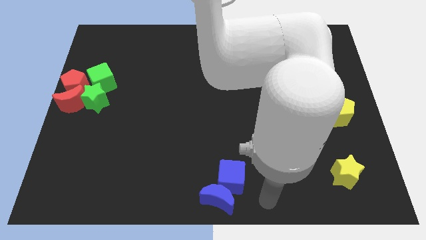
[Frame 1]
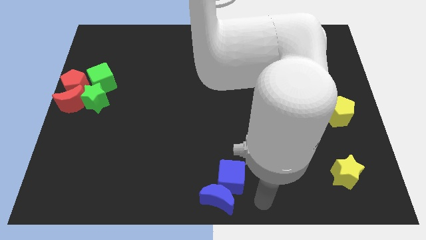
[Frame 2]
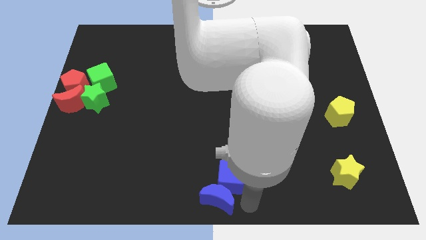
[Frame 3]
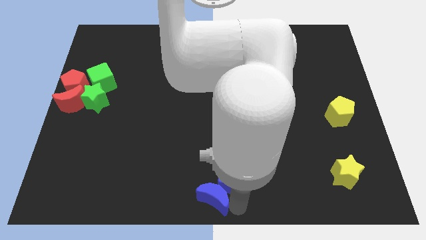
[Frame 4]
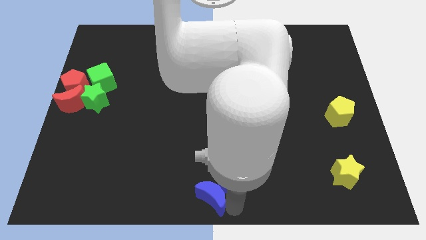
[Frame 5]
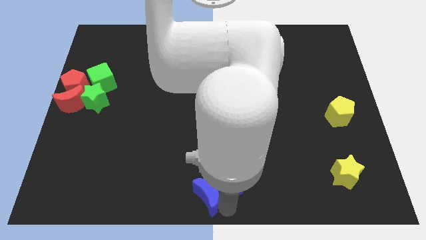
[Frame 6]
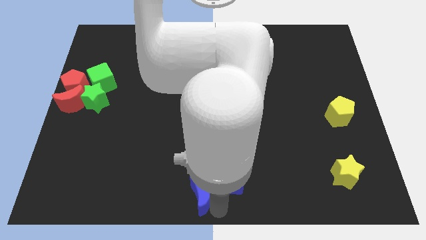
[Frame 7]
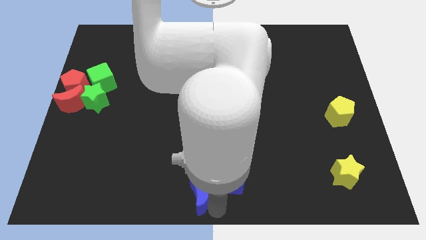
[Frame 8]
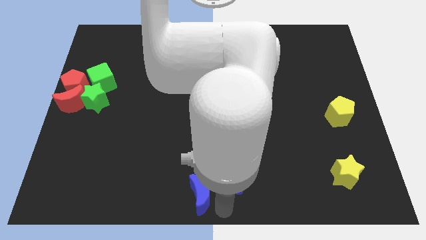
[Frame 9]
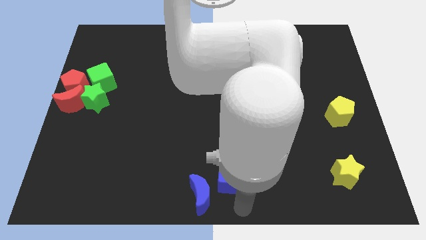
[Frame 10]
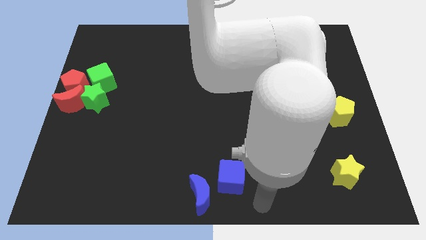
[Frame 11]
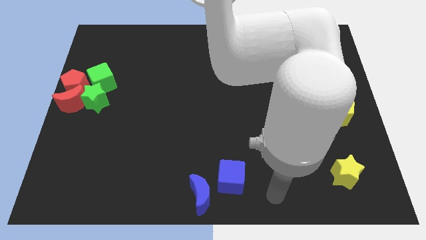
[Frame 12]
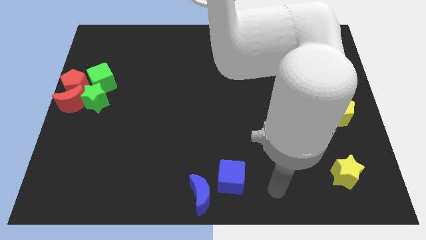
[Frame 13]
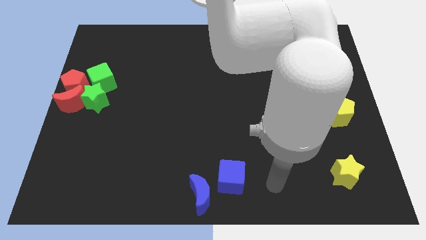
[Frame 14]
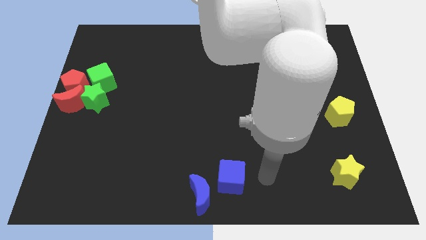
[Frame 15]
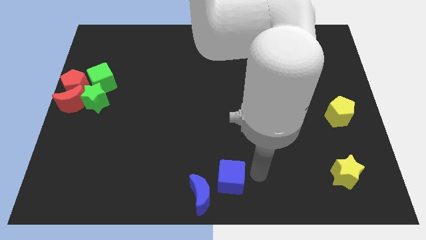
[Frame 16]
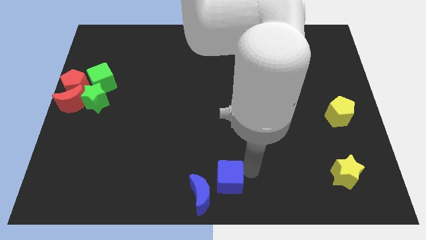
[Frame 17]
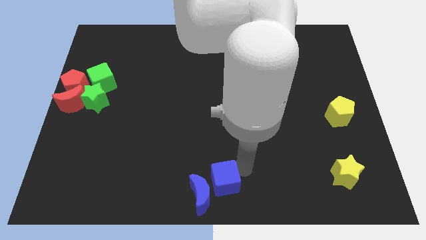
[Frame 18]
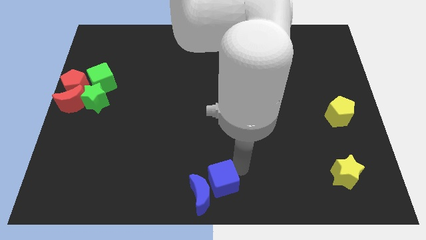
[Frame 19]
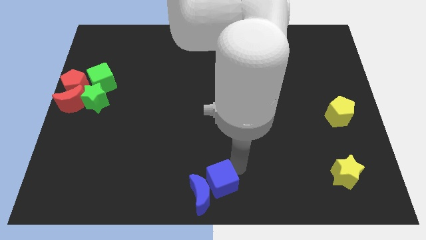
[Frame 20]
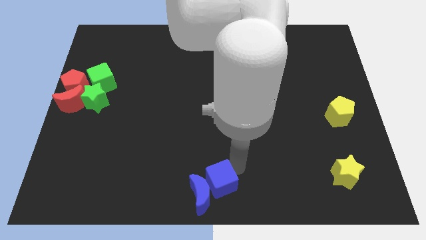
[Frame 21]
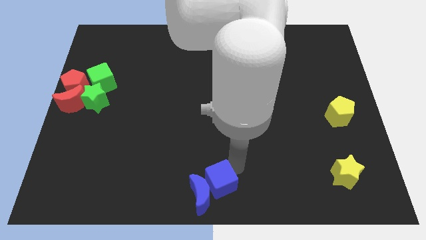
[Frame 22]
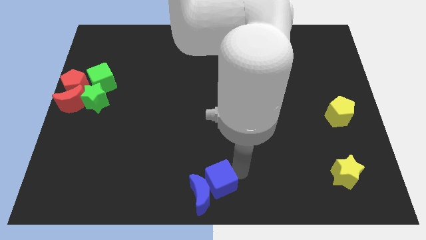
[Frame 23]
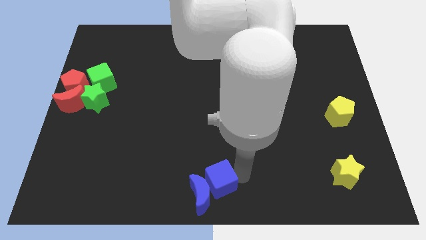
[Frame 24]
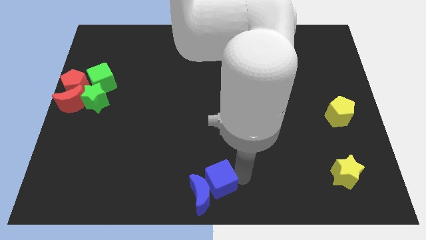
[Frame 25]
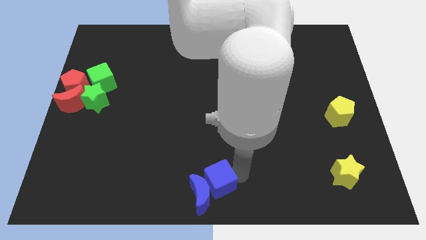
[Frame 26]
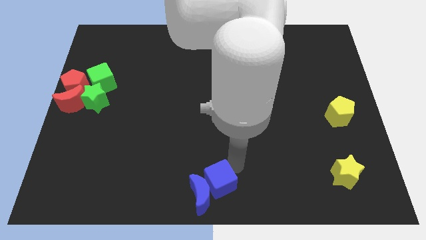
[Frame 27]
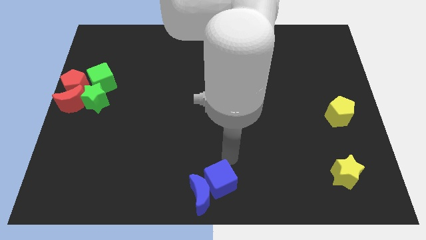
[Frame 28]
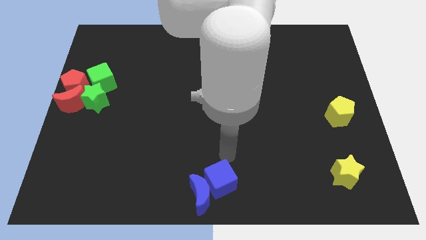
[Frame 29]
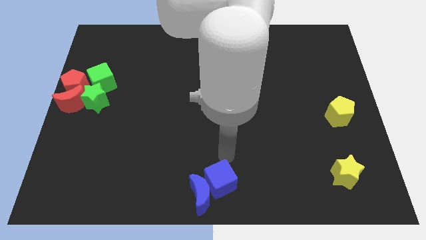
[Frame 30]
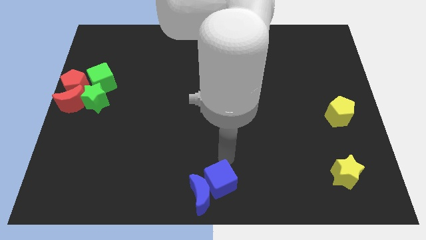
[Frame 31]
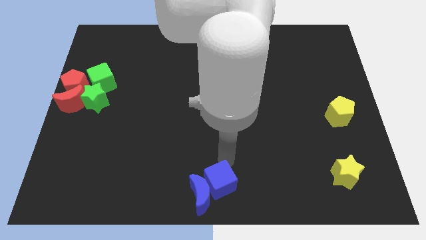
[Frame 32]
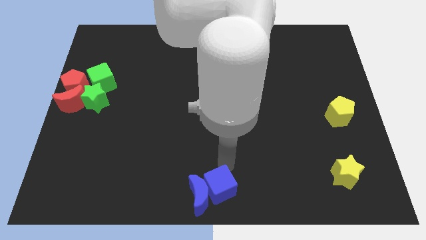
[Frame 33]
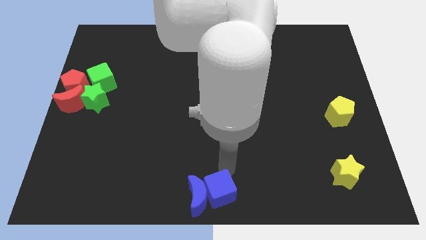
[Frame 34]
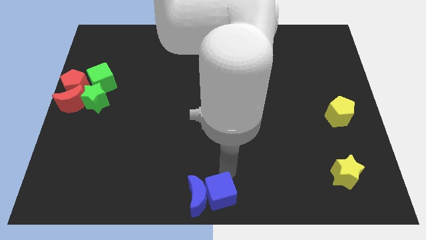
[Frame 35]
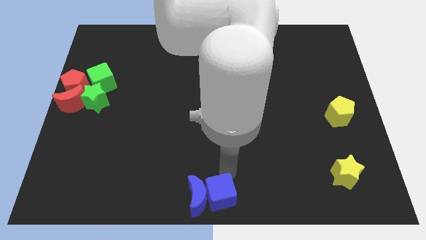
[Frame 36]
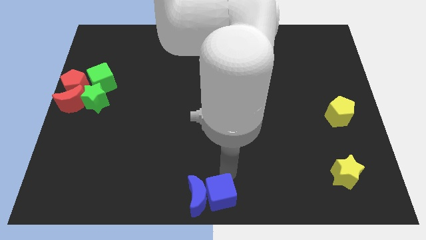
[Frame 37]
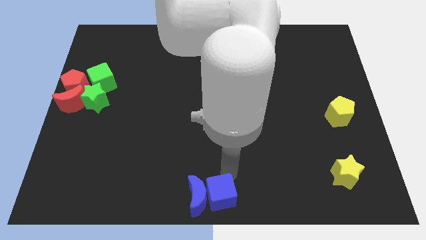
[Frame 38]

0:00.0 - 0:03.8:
adjust the blue blocks at the bottom center of the table

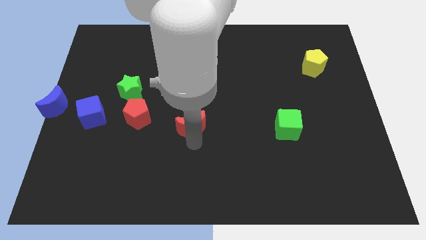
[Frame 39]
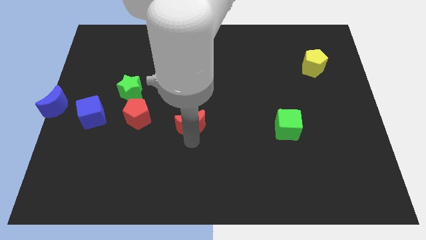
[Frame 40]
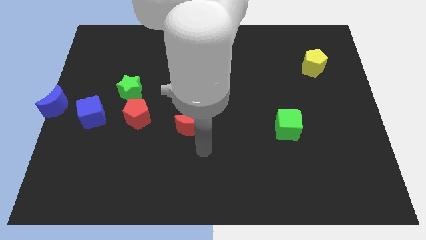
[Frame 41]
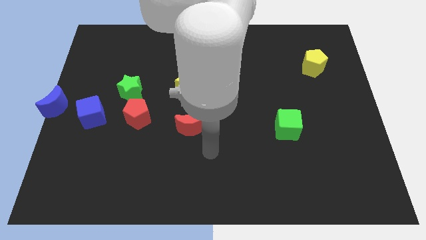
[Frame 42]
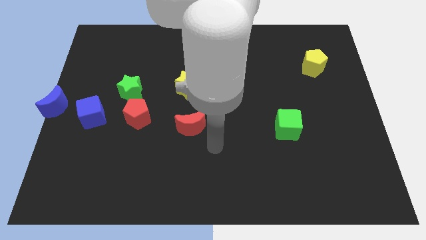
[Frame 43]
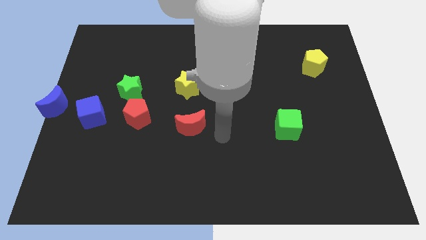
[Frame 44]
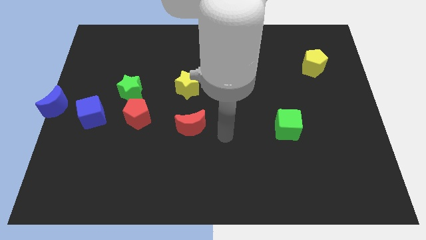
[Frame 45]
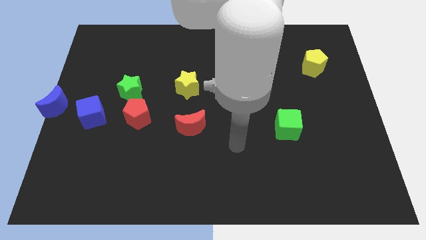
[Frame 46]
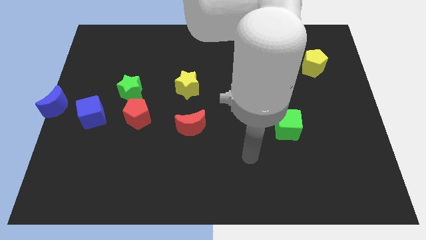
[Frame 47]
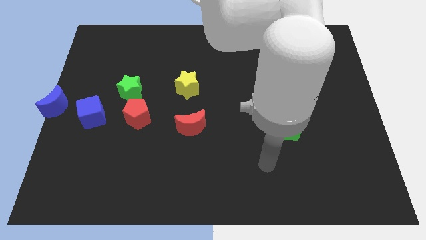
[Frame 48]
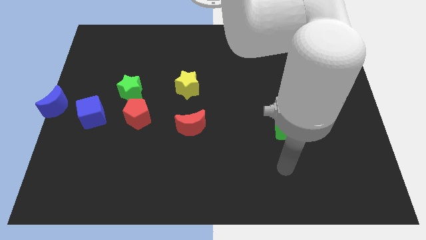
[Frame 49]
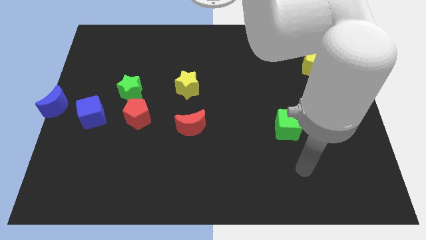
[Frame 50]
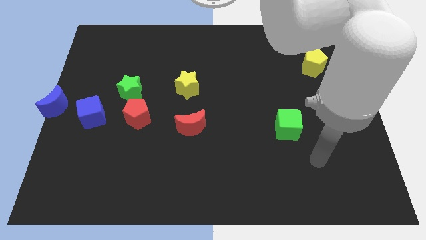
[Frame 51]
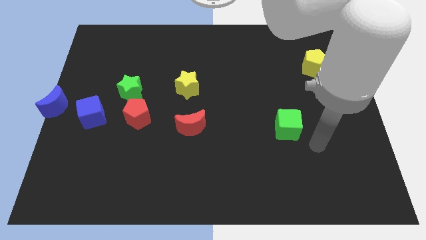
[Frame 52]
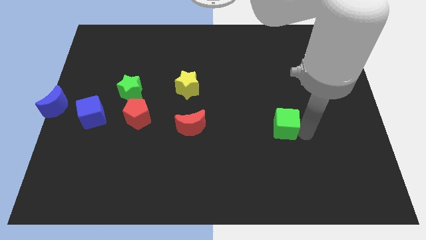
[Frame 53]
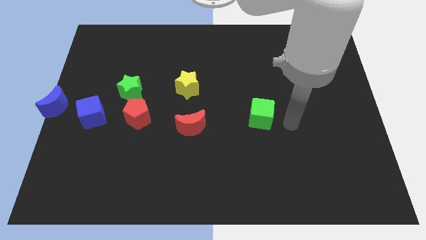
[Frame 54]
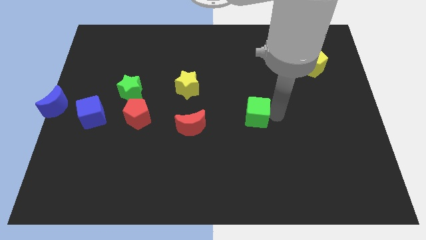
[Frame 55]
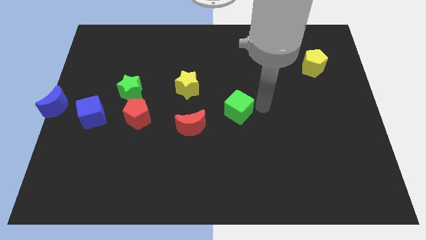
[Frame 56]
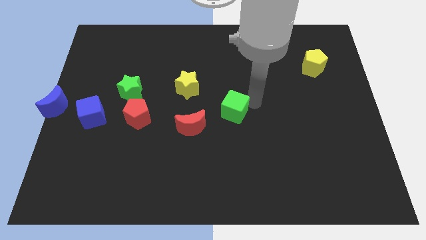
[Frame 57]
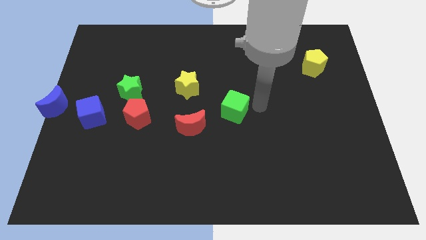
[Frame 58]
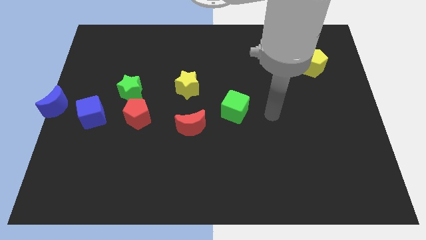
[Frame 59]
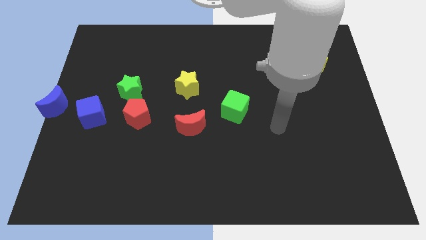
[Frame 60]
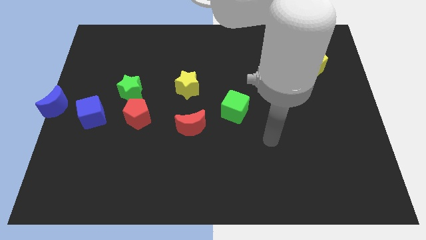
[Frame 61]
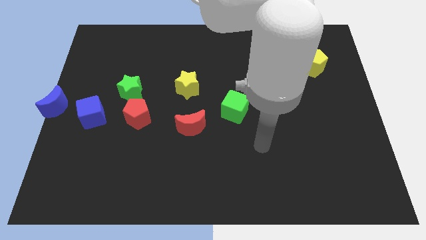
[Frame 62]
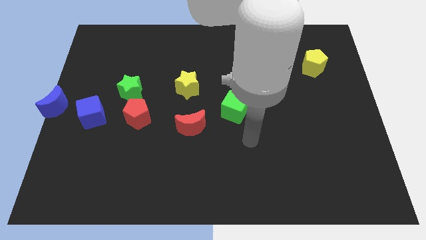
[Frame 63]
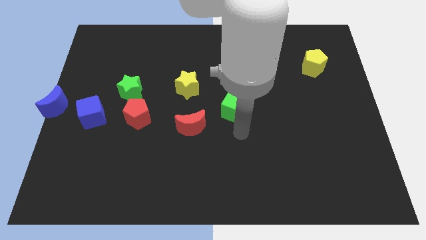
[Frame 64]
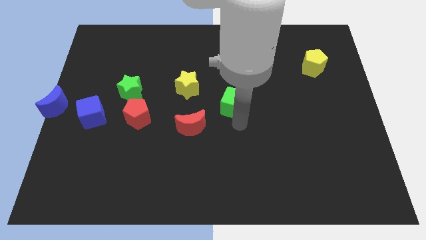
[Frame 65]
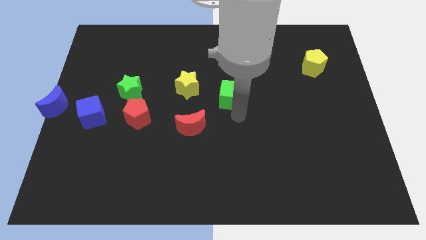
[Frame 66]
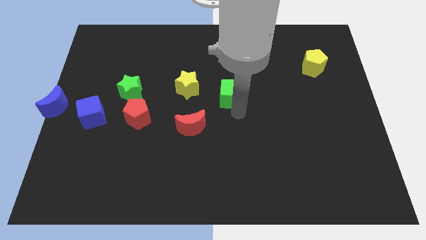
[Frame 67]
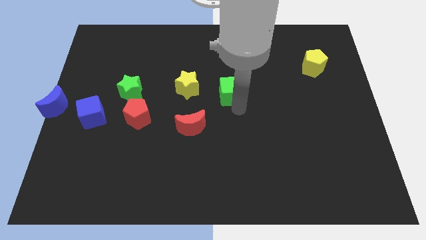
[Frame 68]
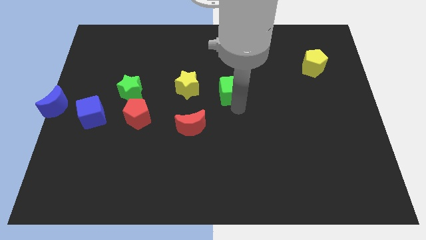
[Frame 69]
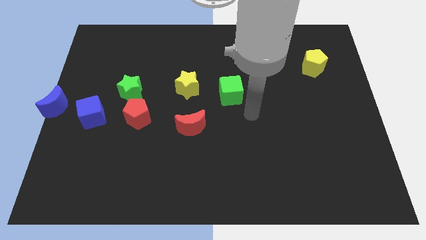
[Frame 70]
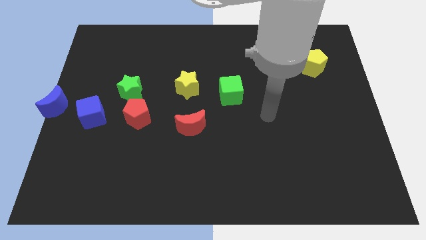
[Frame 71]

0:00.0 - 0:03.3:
slide the green cube towards the yellow star

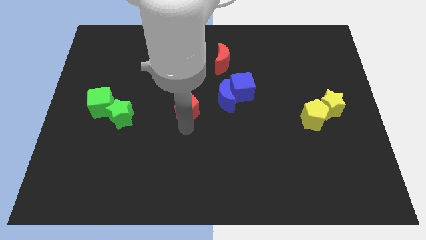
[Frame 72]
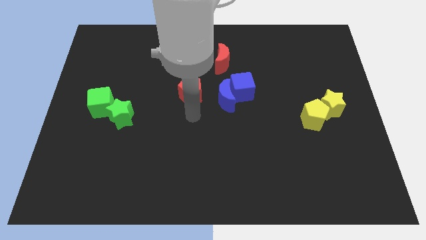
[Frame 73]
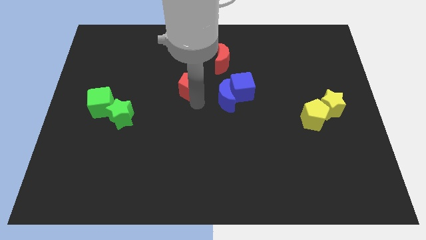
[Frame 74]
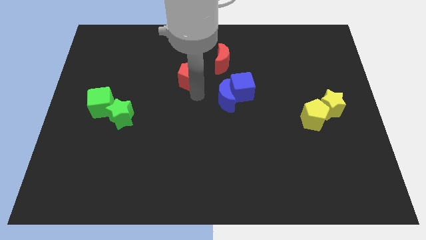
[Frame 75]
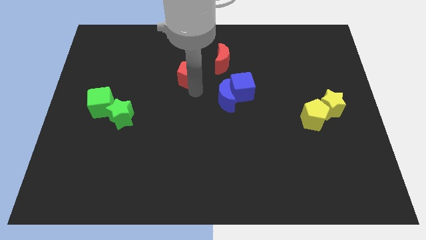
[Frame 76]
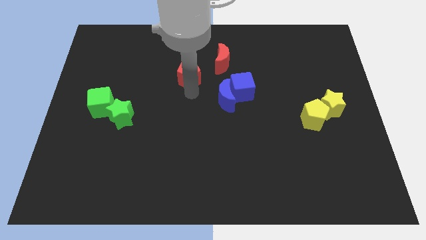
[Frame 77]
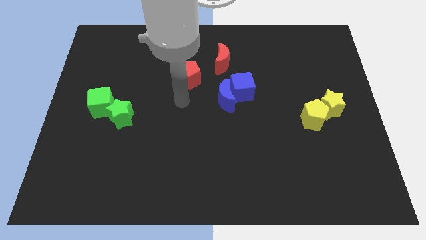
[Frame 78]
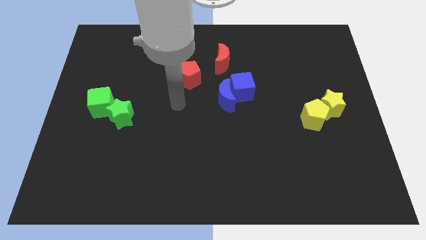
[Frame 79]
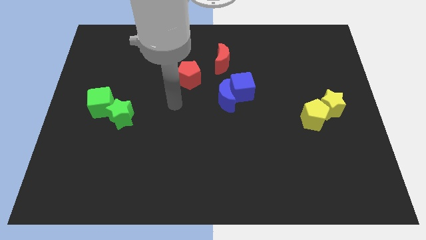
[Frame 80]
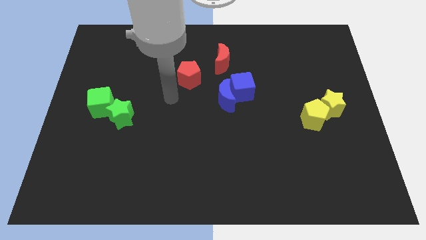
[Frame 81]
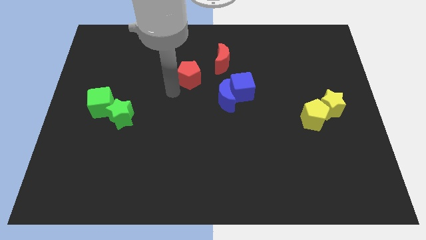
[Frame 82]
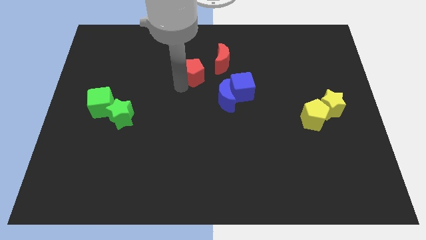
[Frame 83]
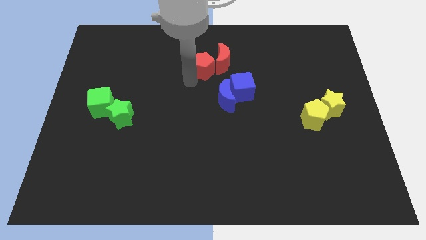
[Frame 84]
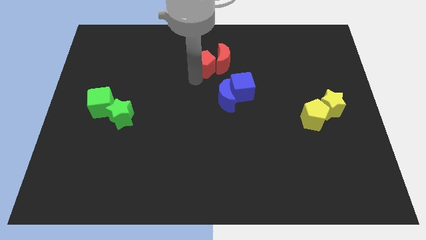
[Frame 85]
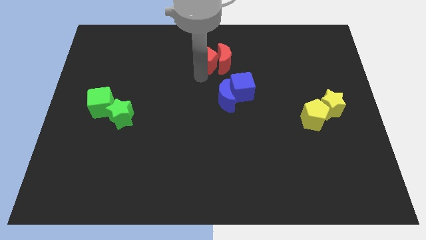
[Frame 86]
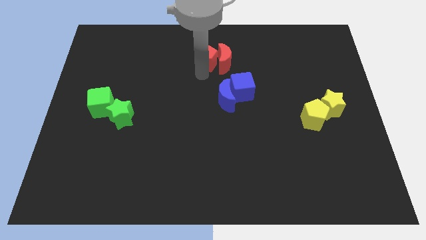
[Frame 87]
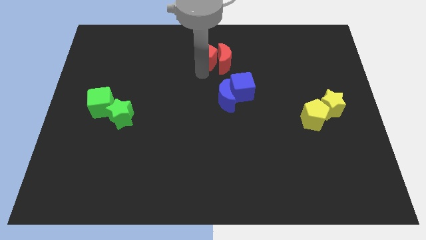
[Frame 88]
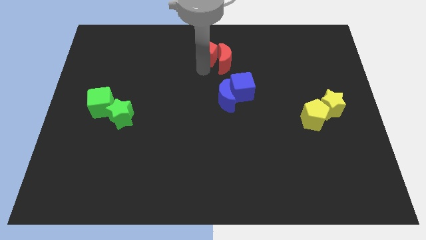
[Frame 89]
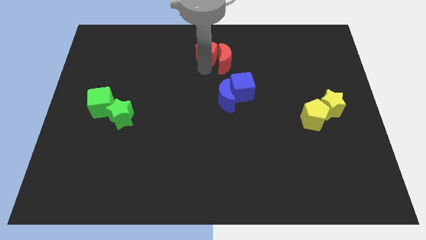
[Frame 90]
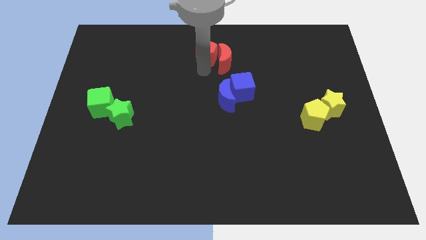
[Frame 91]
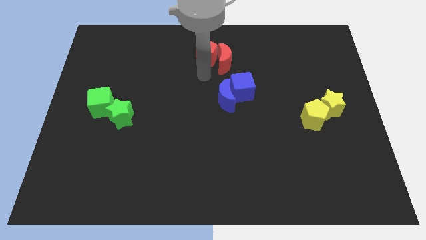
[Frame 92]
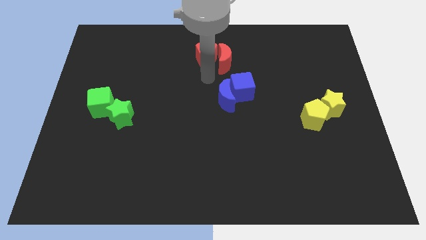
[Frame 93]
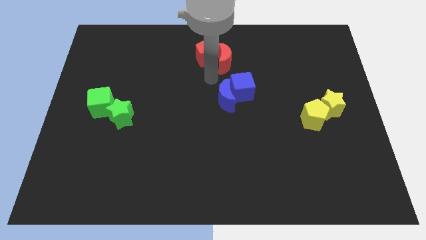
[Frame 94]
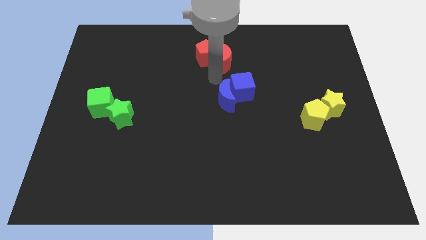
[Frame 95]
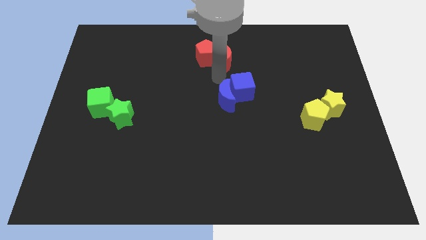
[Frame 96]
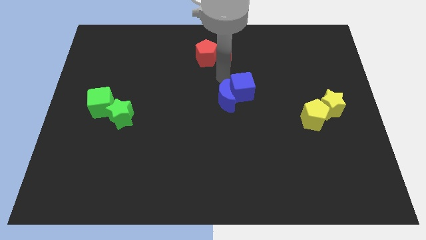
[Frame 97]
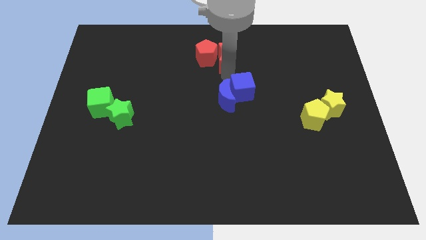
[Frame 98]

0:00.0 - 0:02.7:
move the red pentagon close to the red moon
